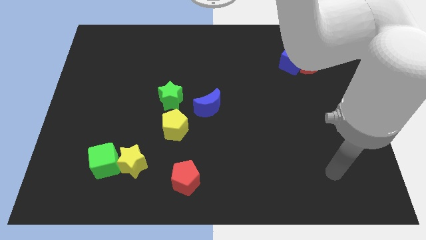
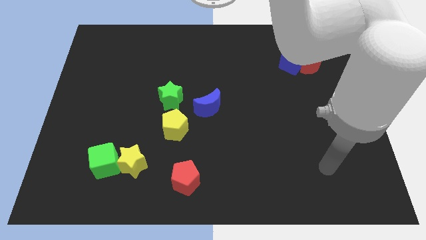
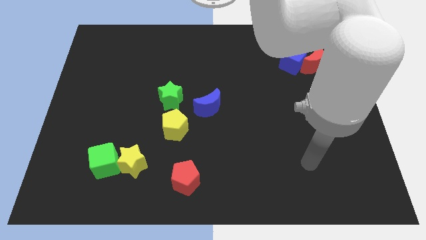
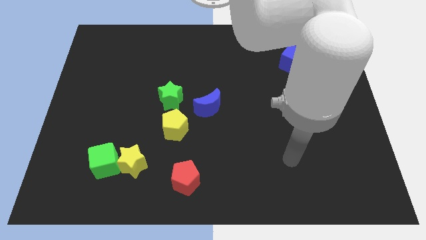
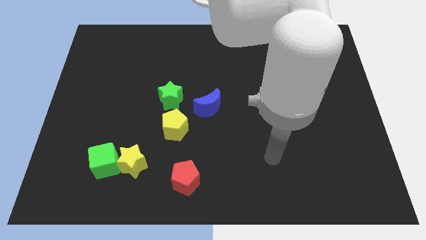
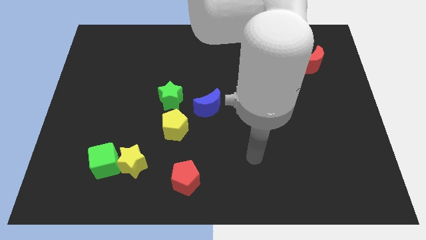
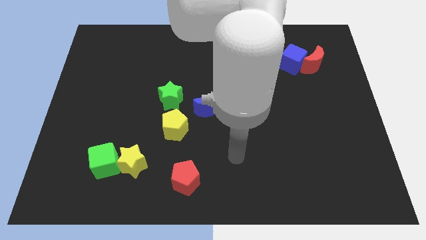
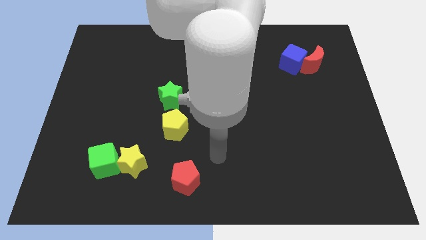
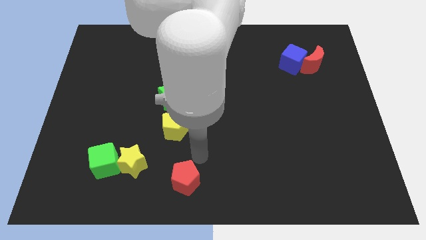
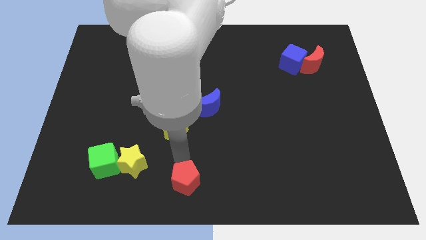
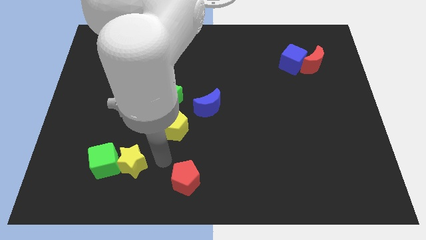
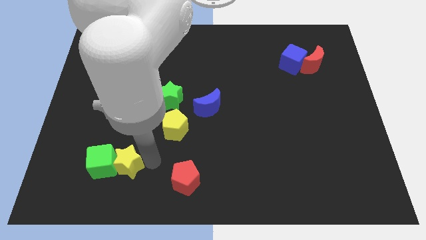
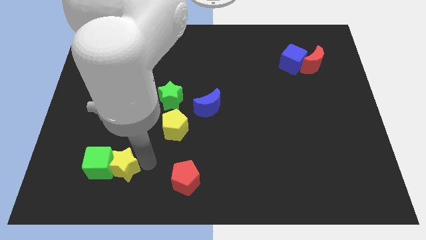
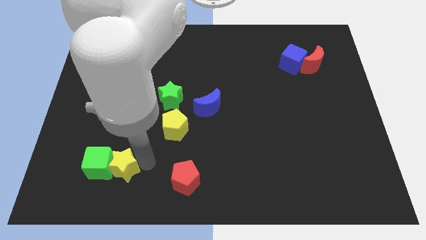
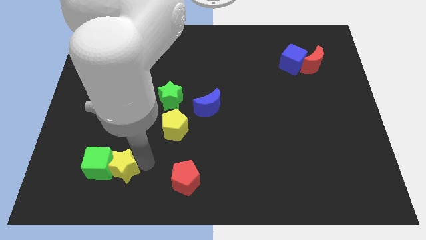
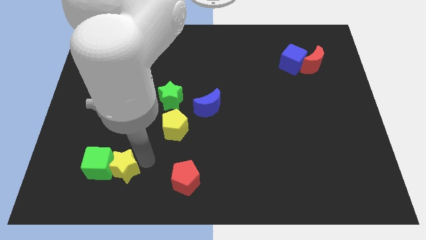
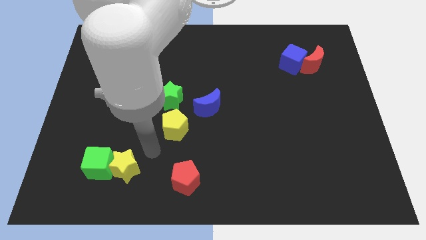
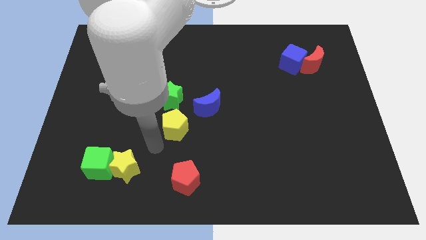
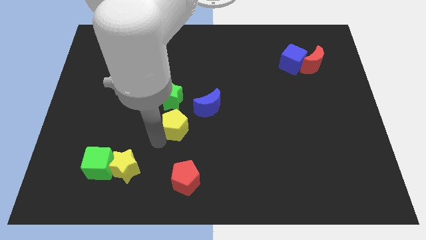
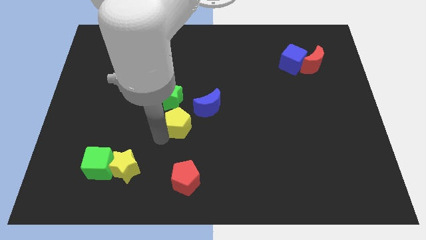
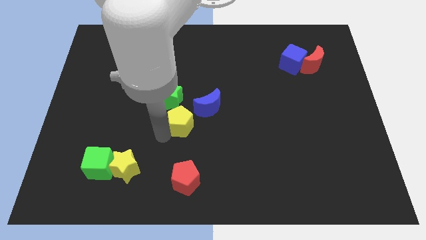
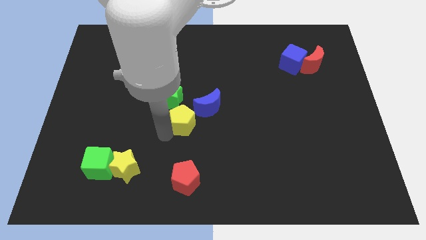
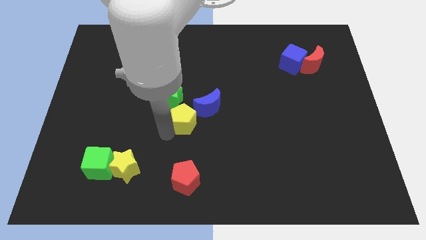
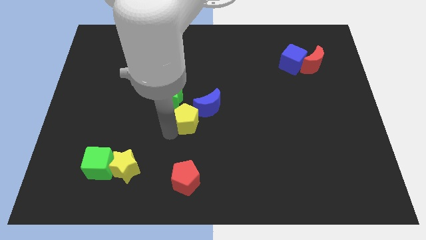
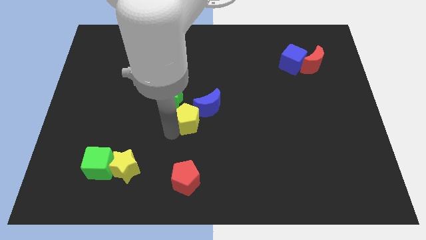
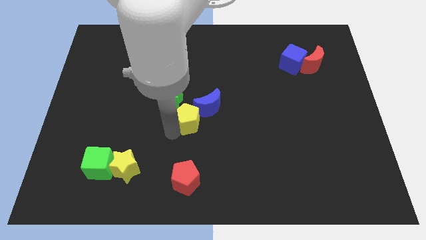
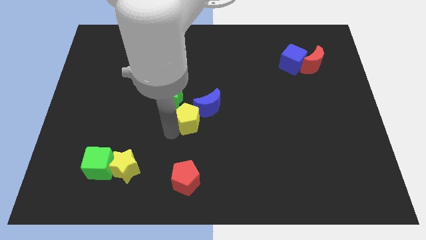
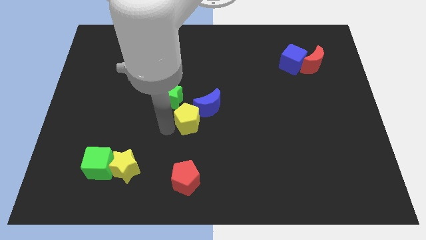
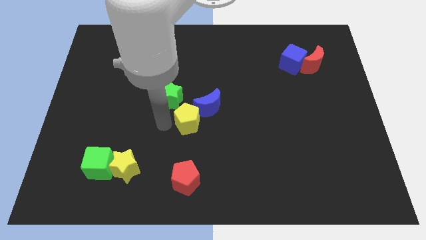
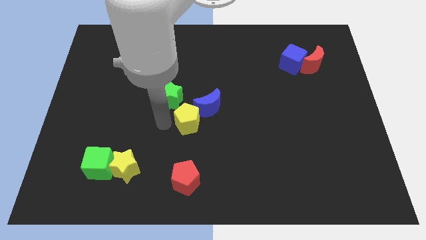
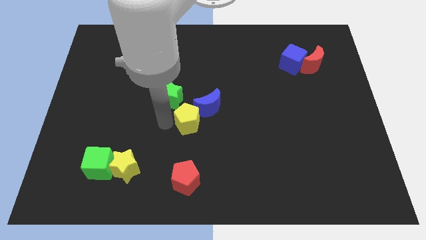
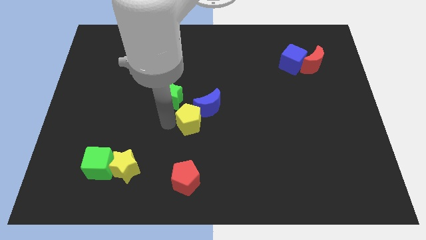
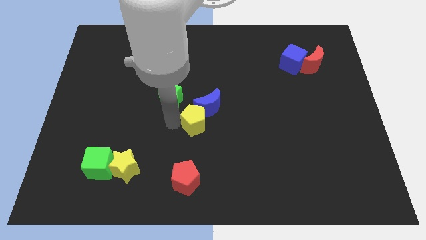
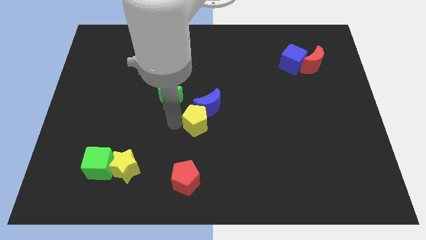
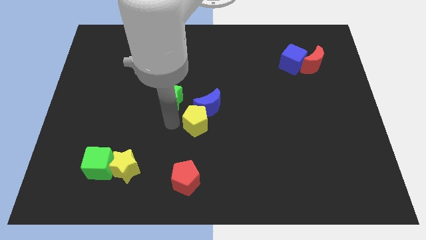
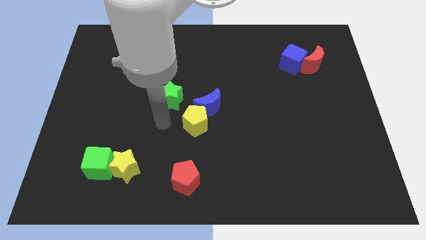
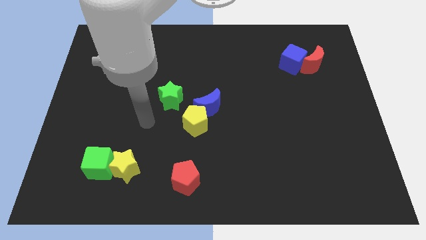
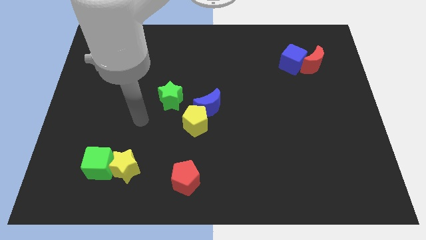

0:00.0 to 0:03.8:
touch both the yellow blocks

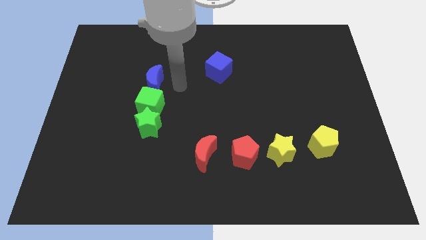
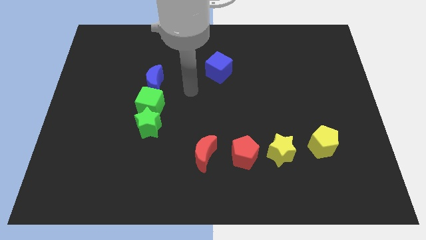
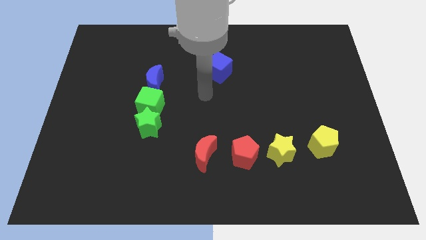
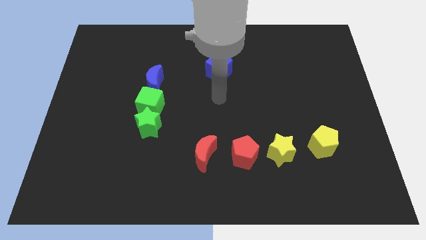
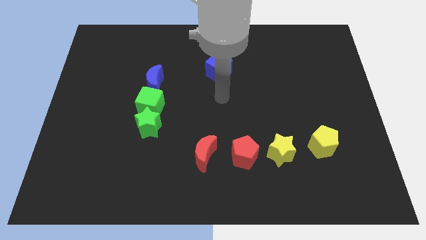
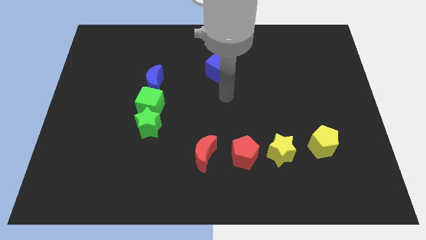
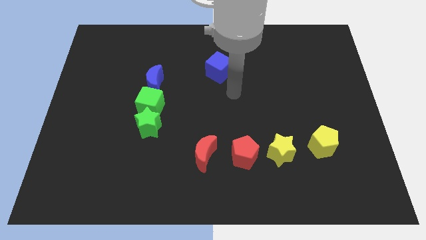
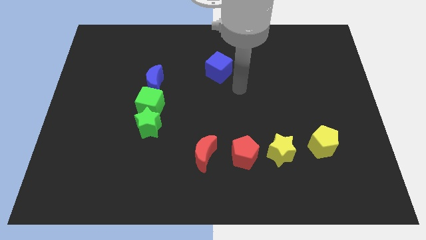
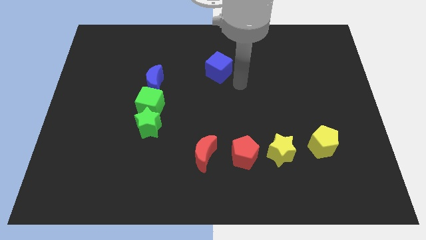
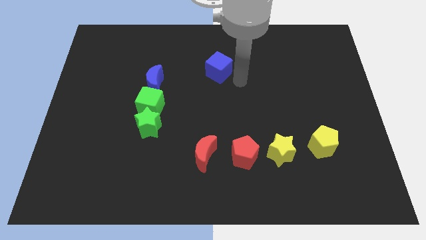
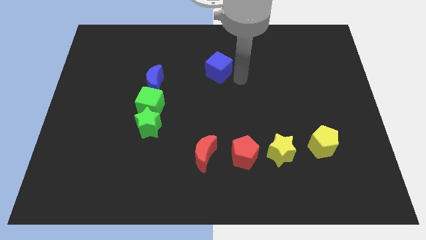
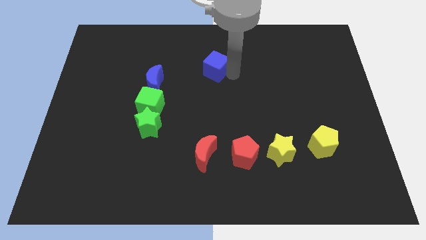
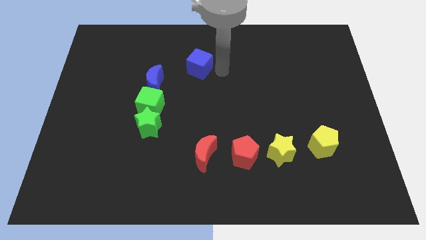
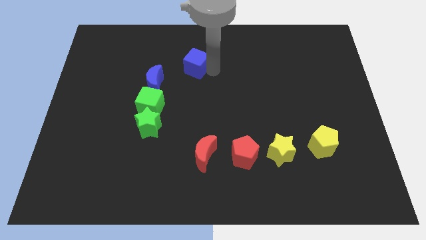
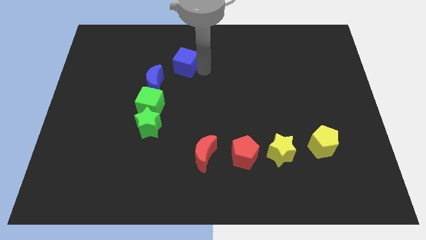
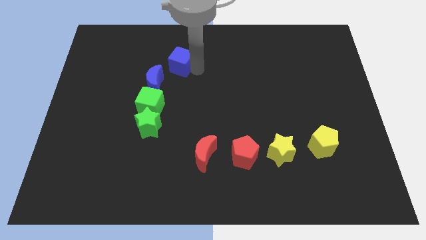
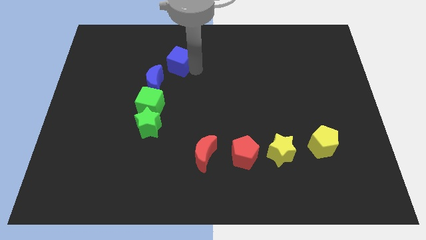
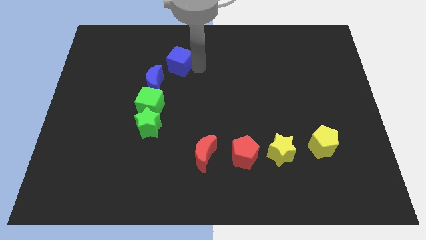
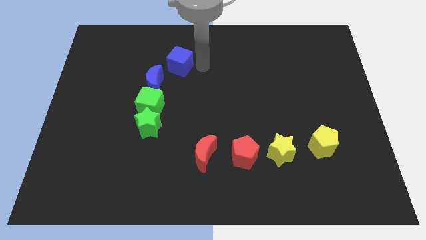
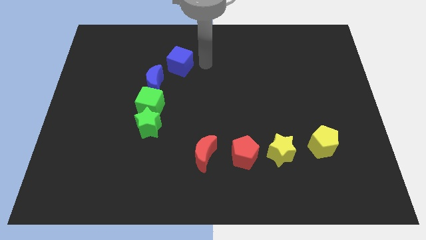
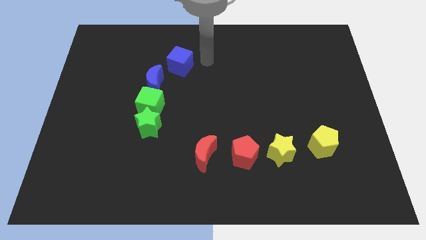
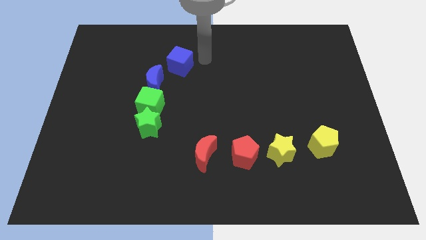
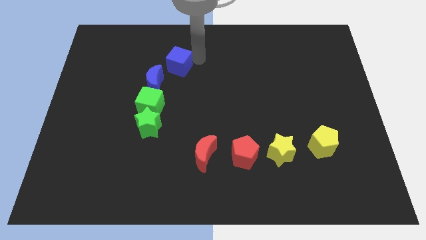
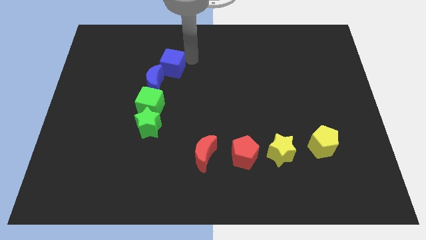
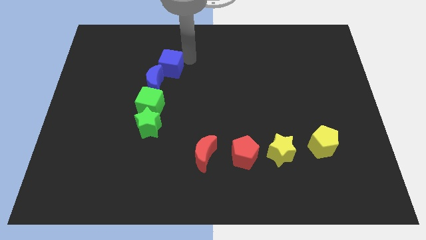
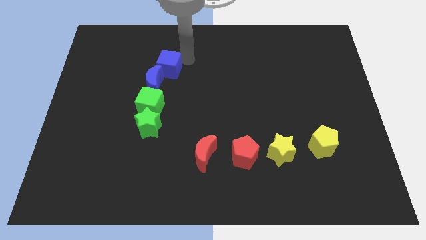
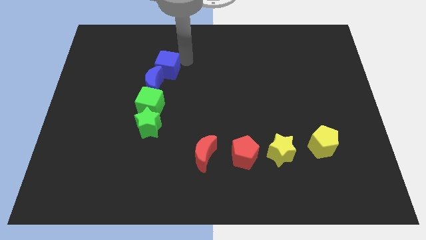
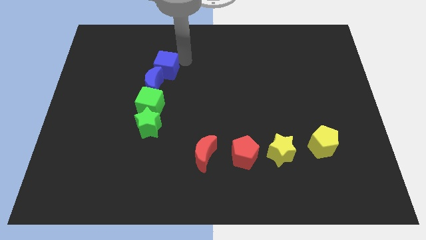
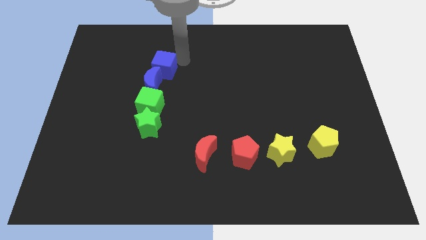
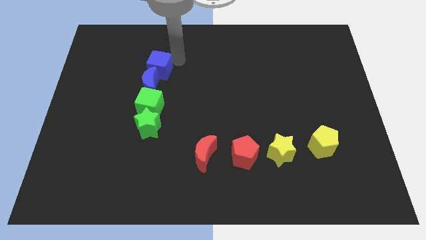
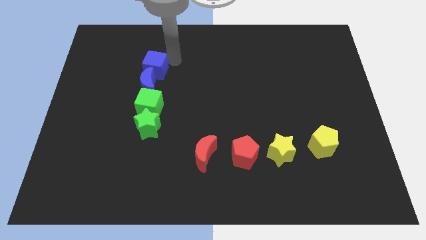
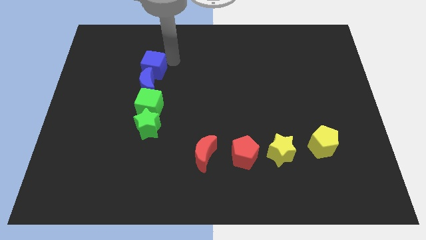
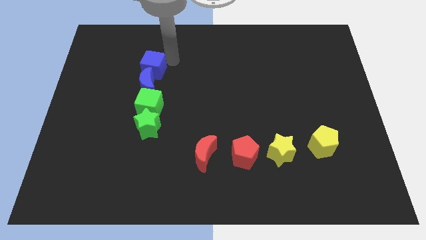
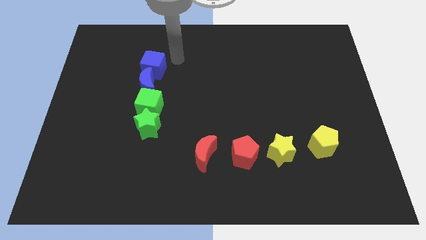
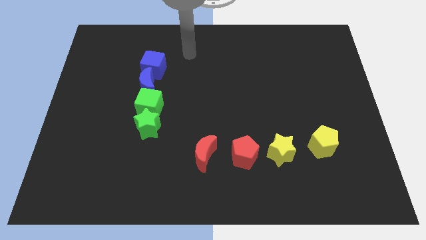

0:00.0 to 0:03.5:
add the blue square to the top of the vertical line of three blocks

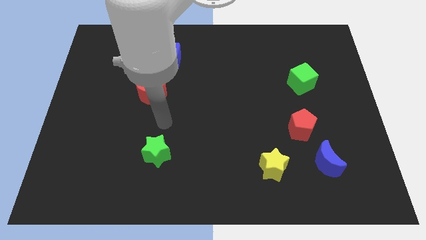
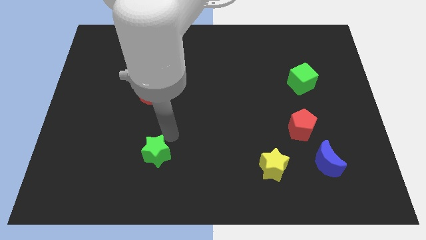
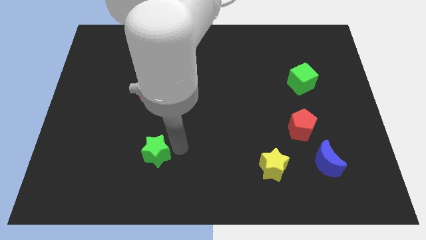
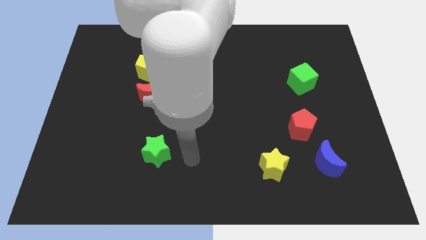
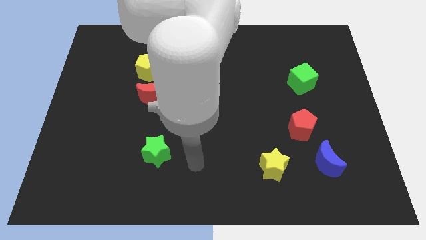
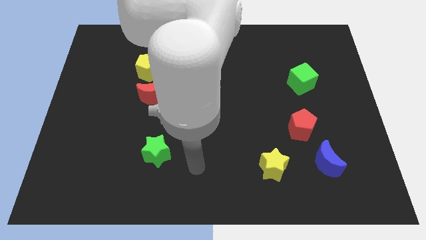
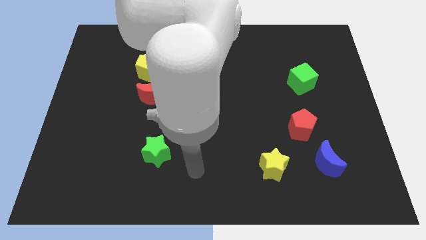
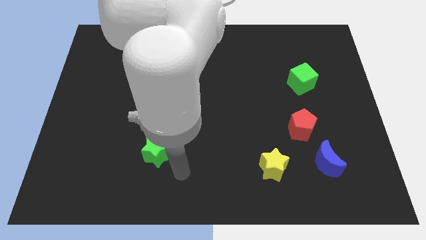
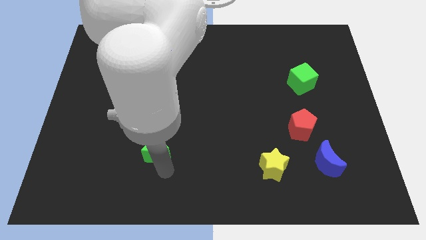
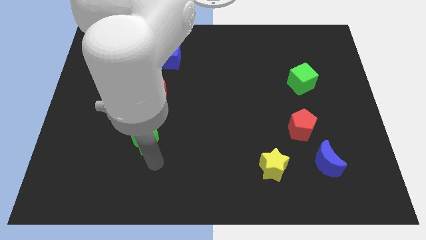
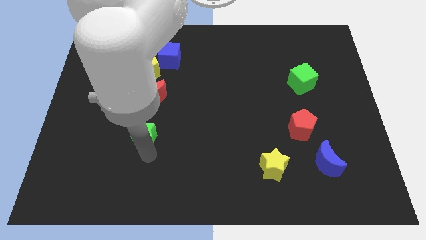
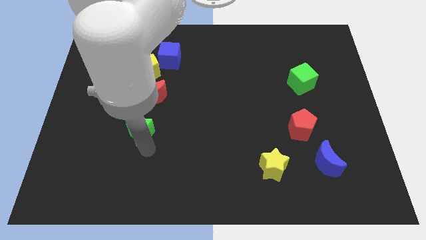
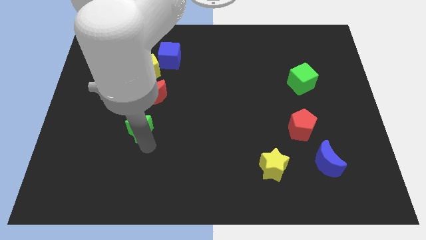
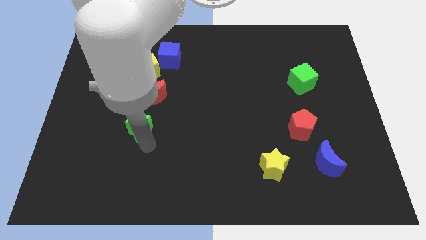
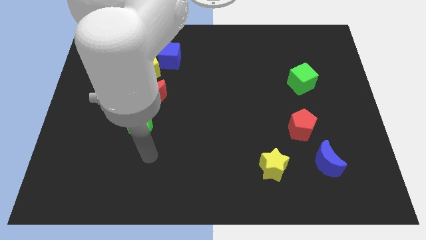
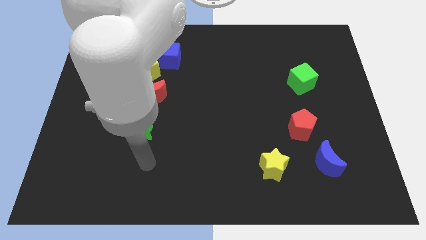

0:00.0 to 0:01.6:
push the green star towards the red moon
